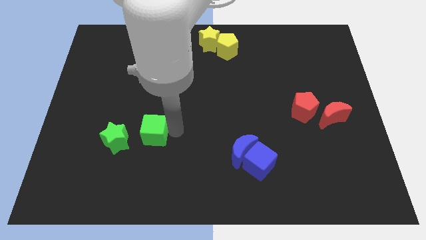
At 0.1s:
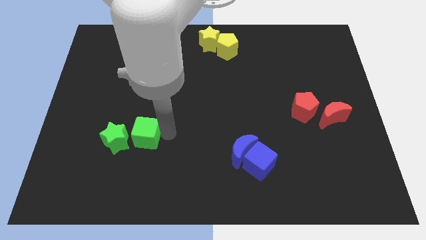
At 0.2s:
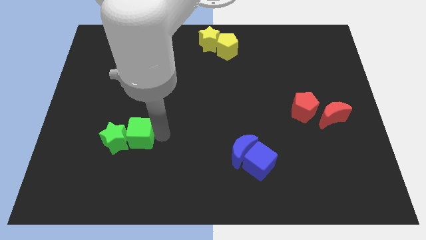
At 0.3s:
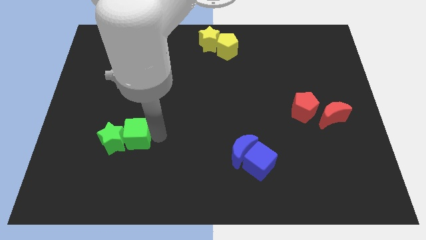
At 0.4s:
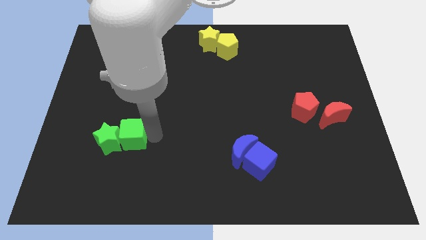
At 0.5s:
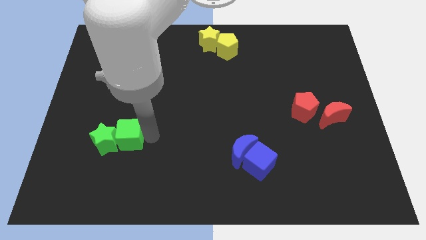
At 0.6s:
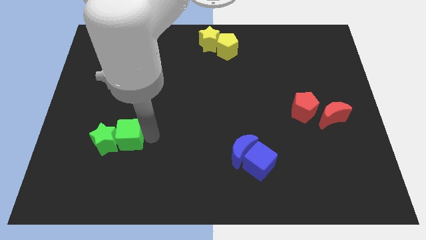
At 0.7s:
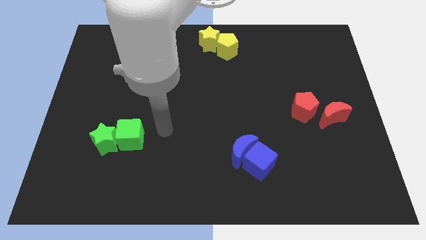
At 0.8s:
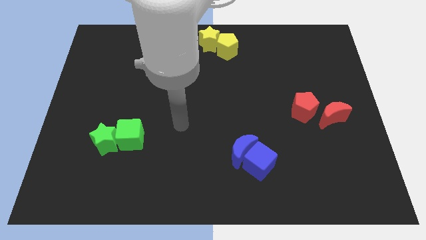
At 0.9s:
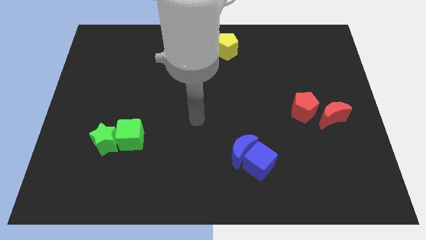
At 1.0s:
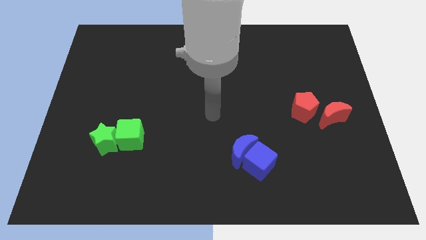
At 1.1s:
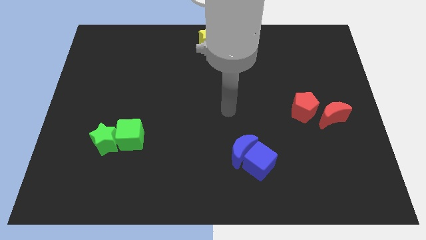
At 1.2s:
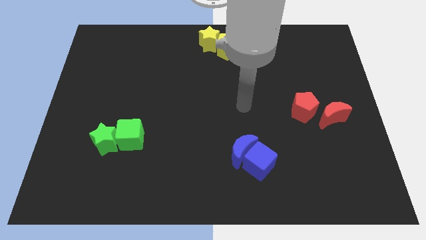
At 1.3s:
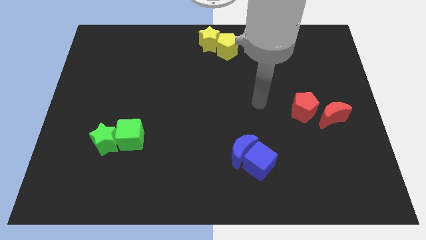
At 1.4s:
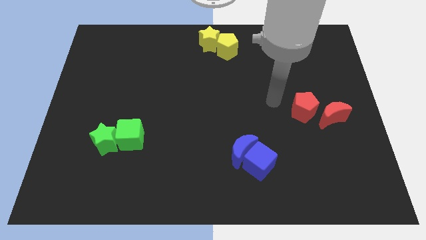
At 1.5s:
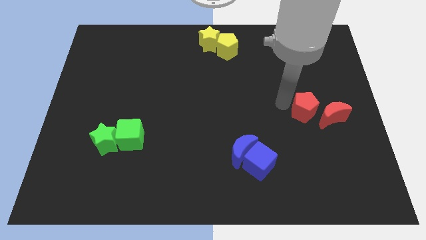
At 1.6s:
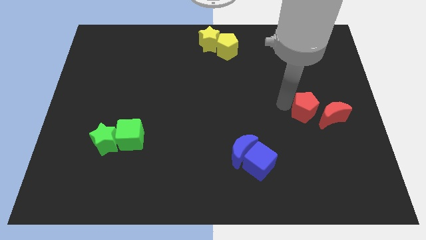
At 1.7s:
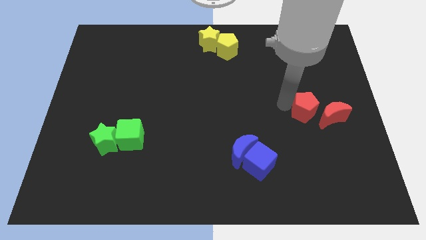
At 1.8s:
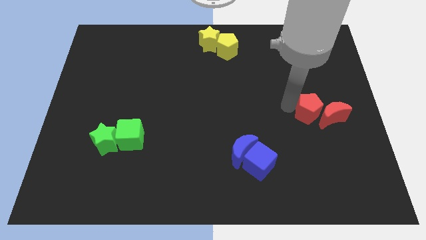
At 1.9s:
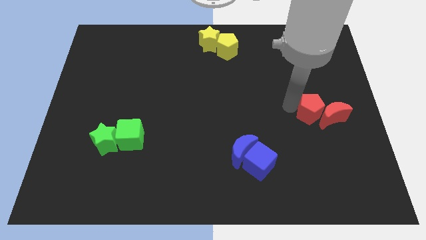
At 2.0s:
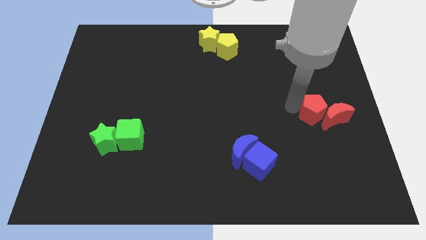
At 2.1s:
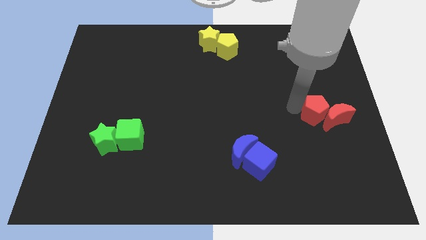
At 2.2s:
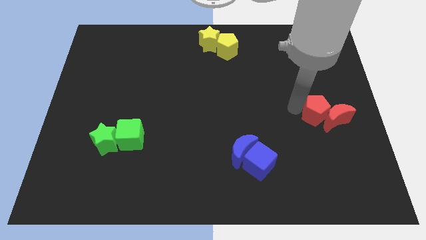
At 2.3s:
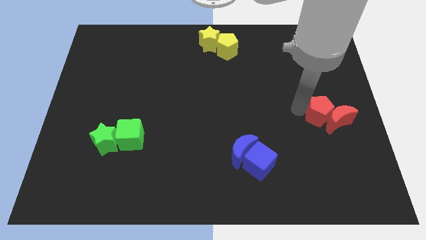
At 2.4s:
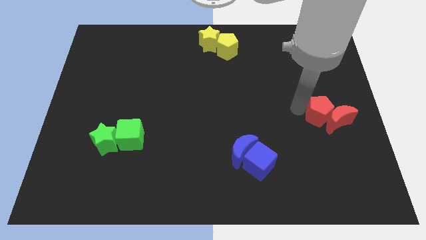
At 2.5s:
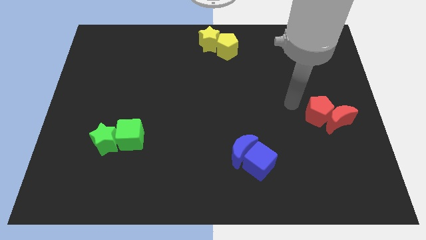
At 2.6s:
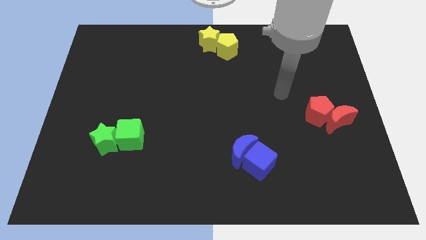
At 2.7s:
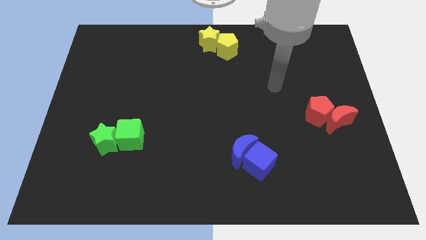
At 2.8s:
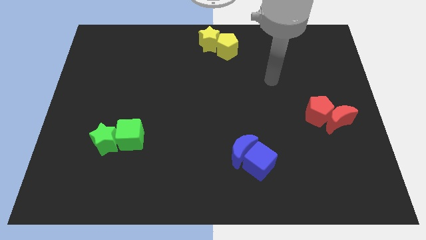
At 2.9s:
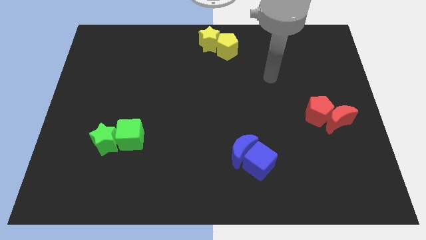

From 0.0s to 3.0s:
push the red pentagon into red crescent

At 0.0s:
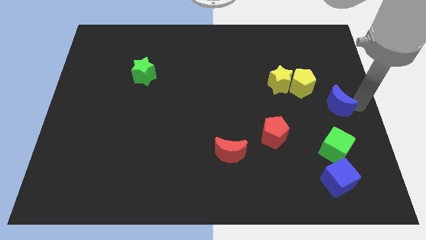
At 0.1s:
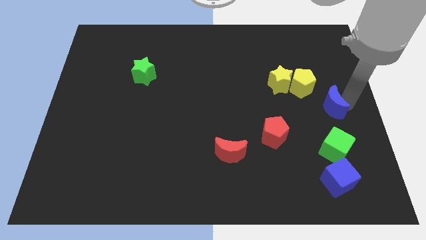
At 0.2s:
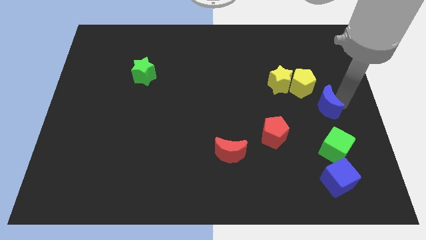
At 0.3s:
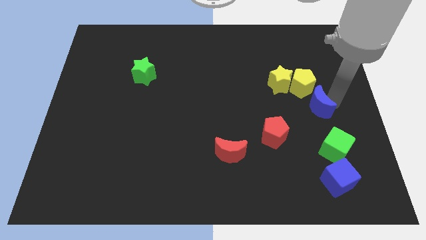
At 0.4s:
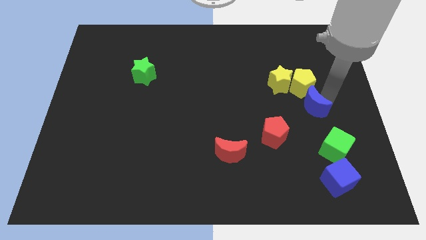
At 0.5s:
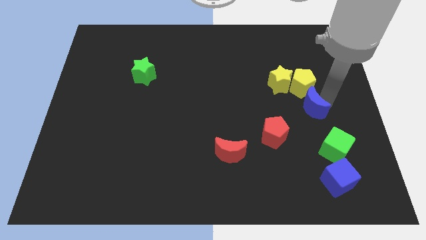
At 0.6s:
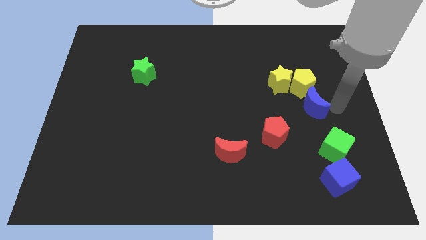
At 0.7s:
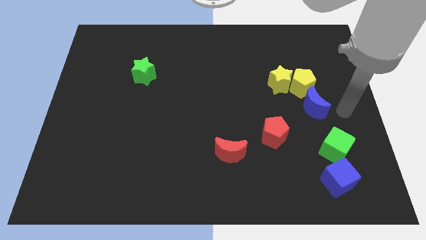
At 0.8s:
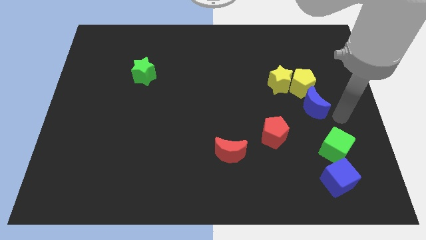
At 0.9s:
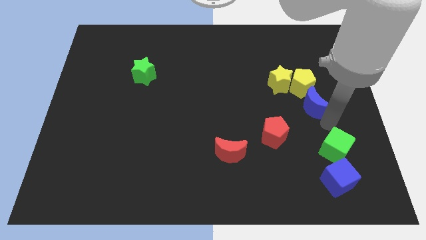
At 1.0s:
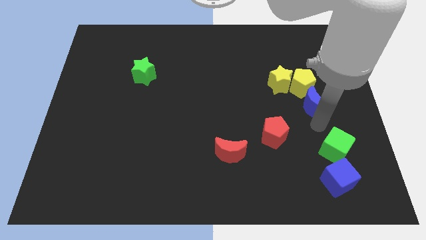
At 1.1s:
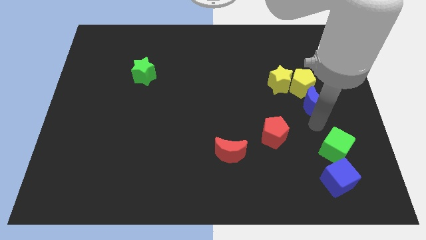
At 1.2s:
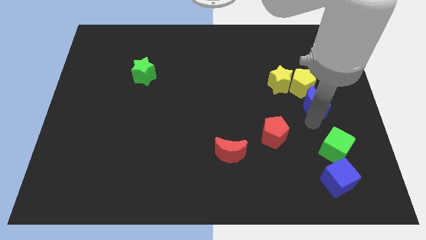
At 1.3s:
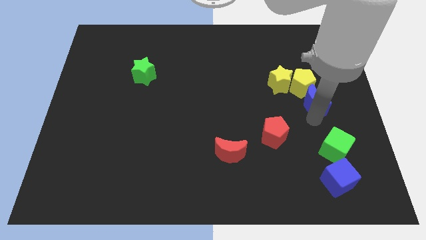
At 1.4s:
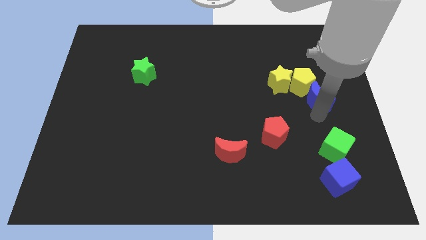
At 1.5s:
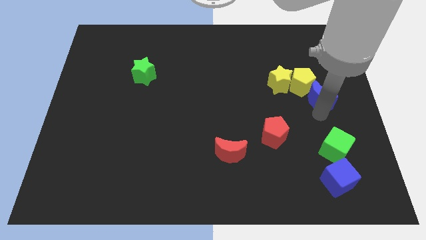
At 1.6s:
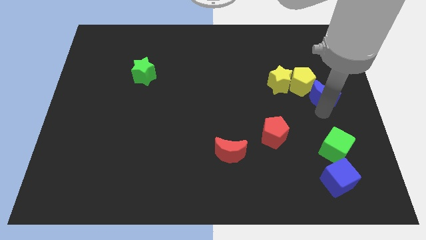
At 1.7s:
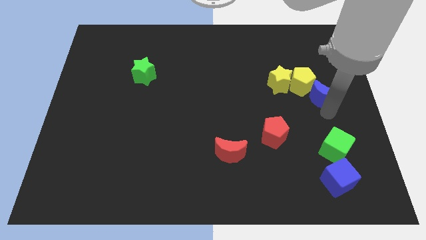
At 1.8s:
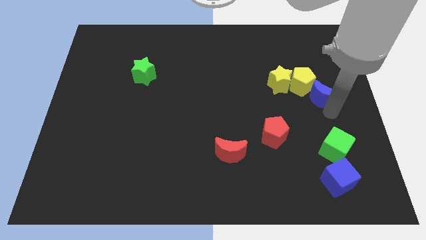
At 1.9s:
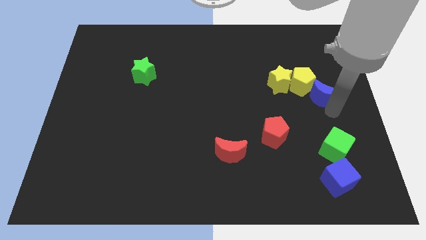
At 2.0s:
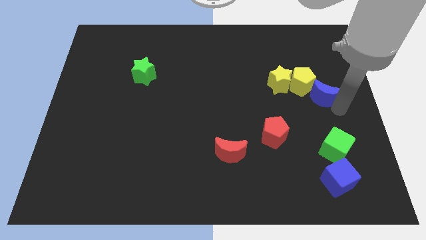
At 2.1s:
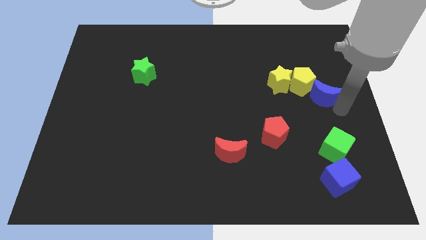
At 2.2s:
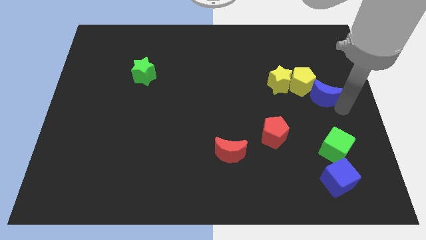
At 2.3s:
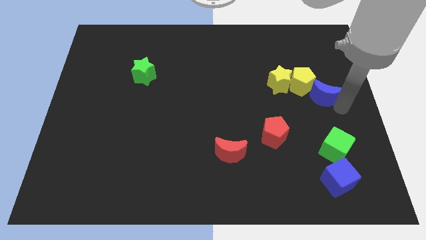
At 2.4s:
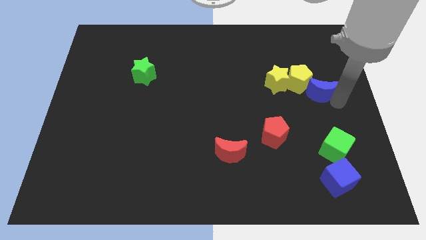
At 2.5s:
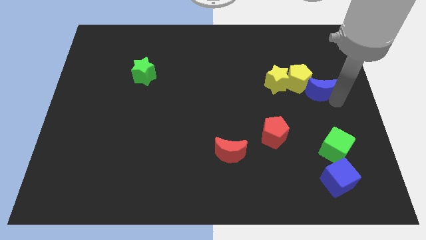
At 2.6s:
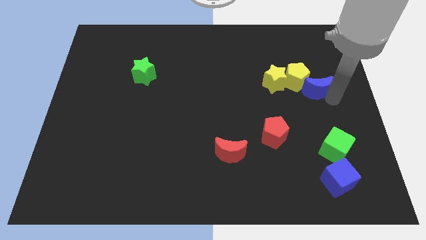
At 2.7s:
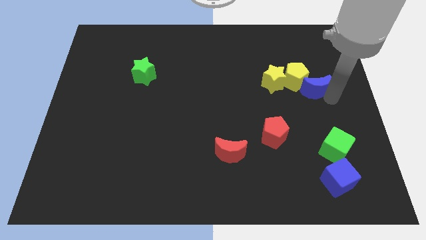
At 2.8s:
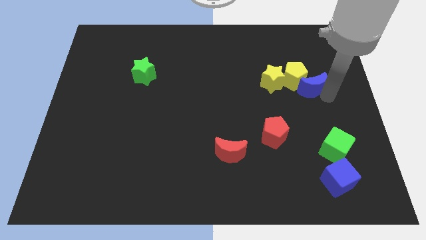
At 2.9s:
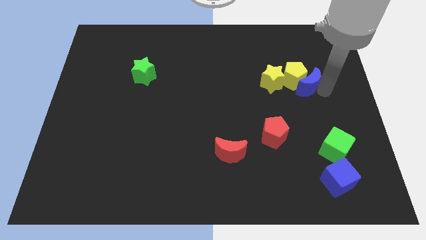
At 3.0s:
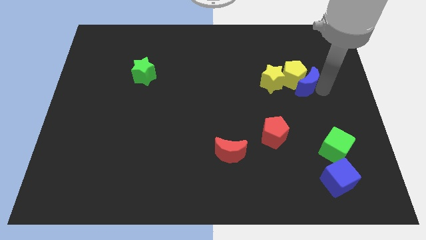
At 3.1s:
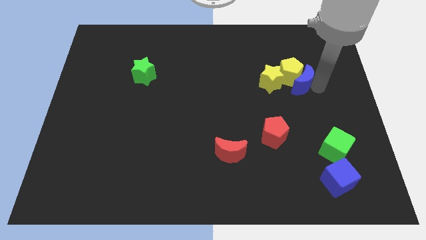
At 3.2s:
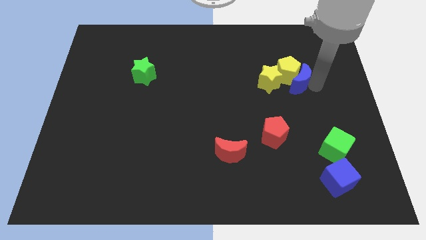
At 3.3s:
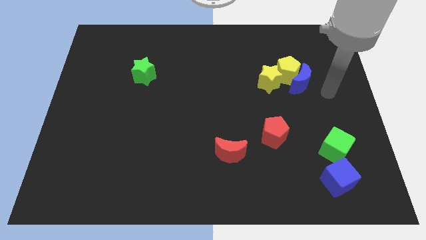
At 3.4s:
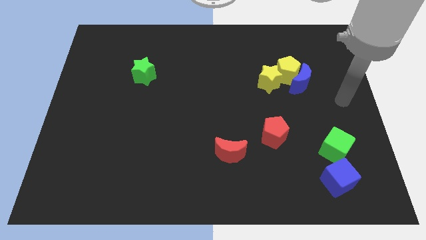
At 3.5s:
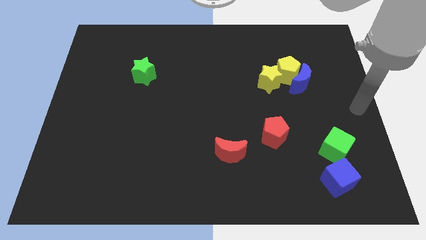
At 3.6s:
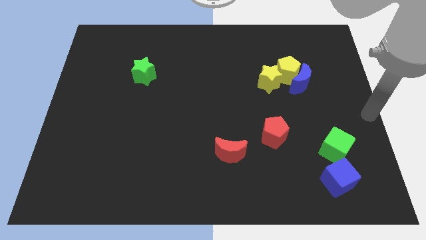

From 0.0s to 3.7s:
push the blue crescent into the yellow pentagon

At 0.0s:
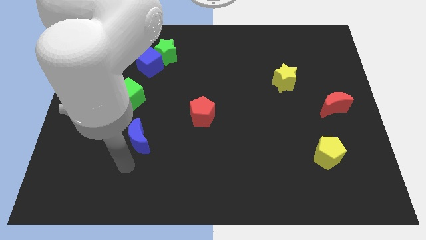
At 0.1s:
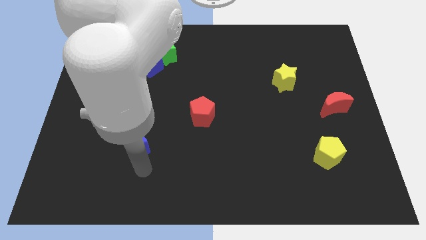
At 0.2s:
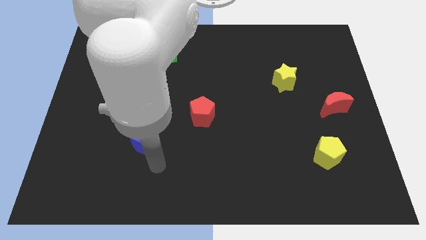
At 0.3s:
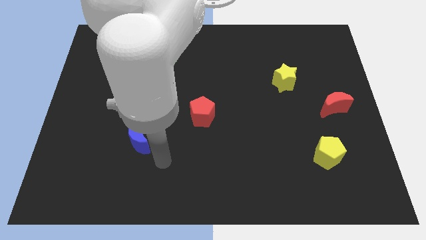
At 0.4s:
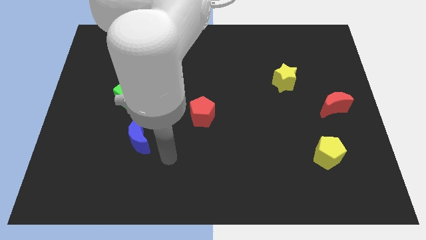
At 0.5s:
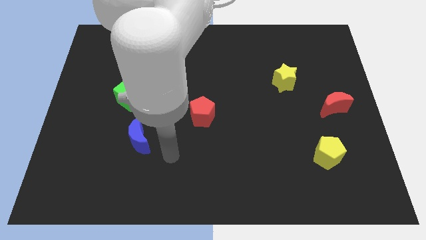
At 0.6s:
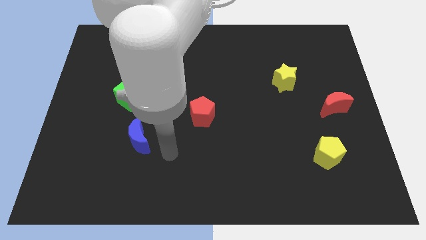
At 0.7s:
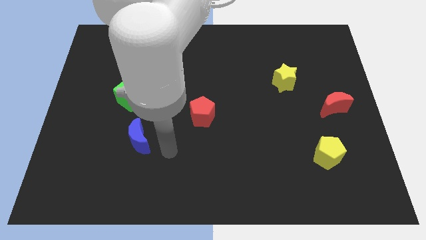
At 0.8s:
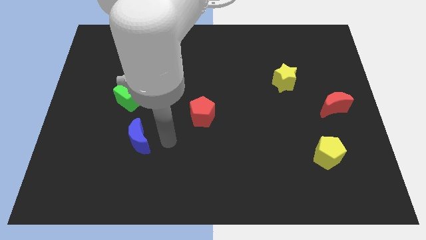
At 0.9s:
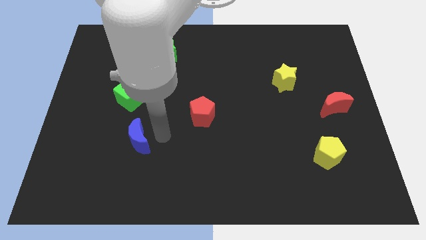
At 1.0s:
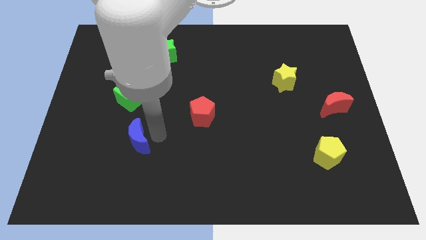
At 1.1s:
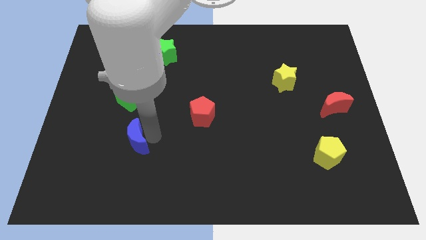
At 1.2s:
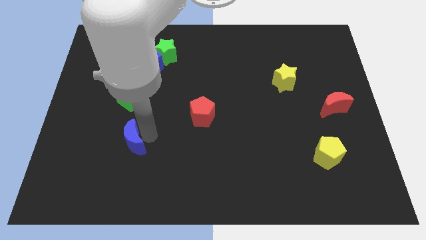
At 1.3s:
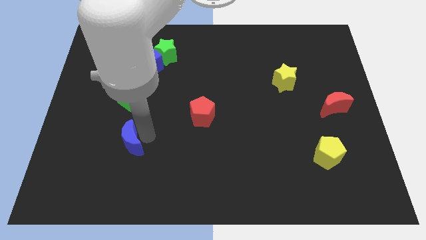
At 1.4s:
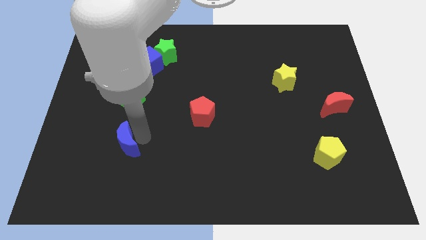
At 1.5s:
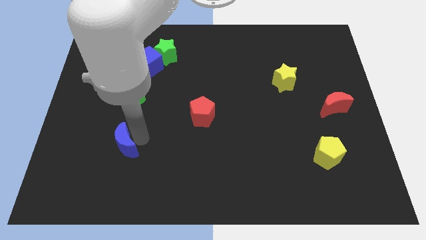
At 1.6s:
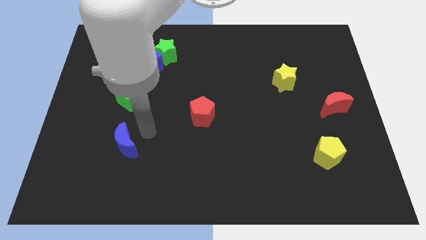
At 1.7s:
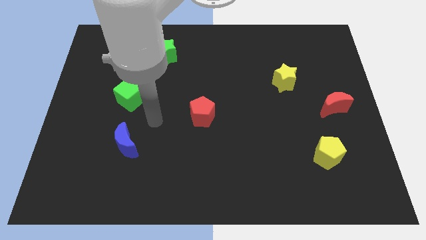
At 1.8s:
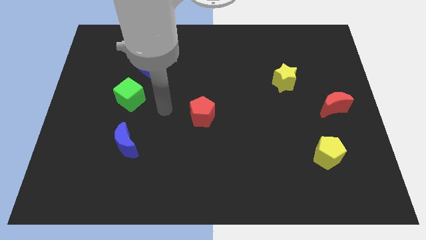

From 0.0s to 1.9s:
move the blue moon underneath the green cube

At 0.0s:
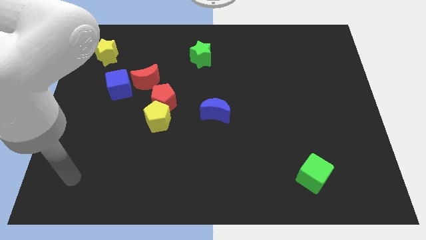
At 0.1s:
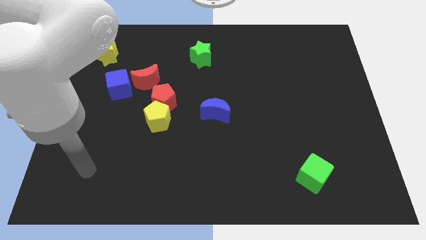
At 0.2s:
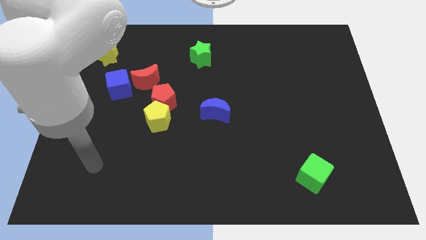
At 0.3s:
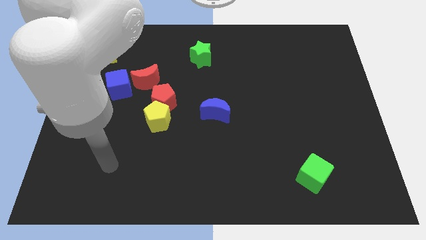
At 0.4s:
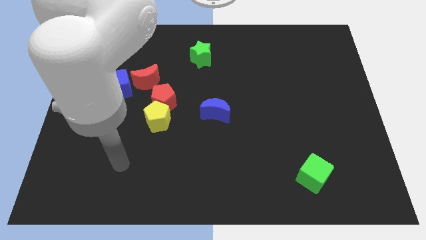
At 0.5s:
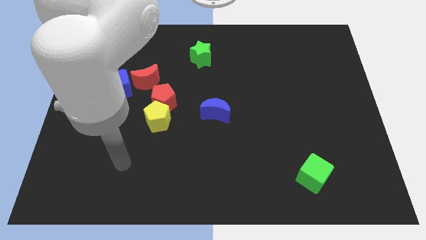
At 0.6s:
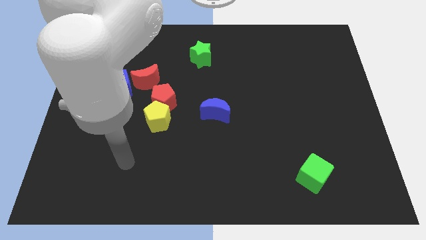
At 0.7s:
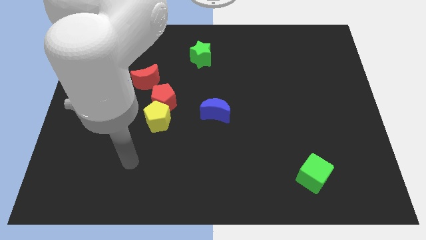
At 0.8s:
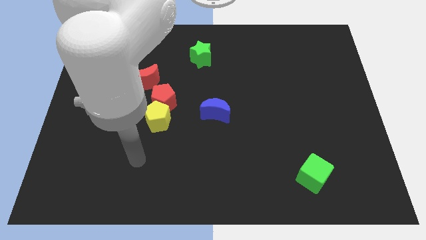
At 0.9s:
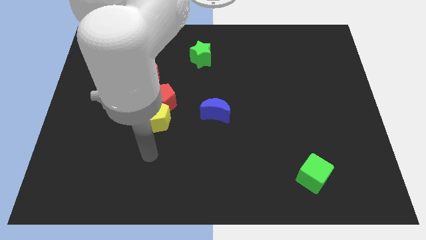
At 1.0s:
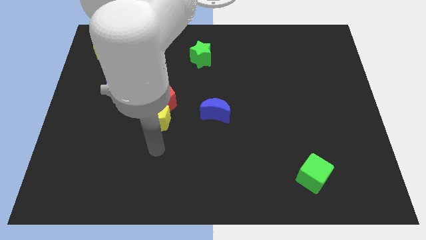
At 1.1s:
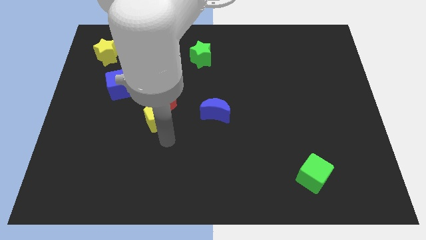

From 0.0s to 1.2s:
place your arm below the yellow pentagon
